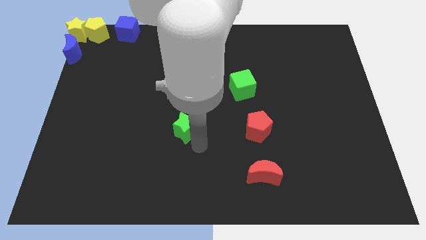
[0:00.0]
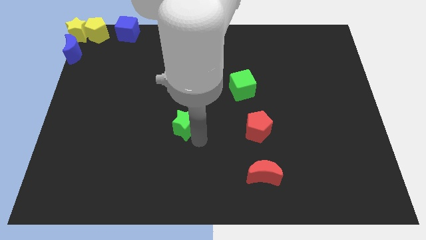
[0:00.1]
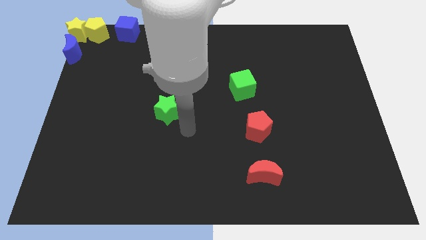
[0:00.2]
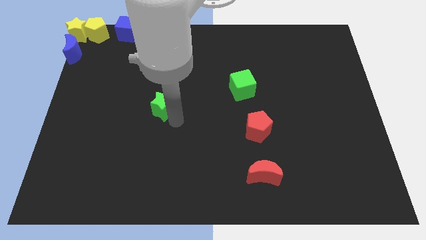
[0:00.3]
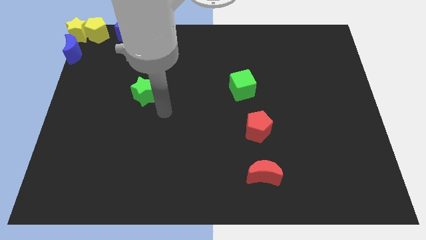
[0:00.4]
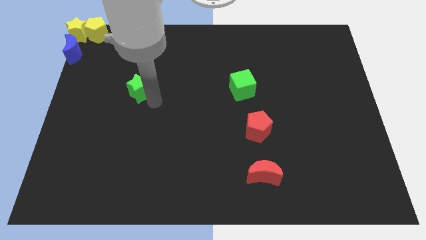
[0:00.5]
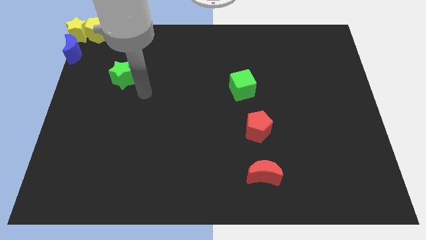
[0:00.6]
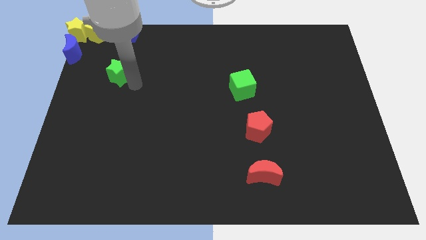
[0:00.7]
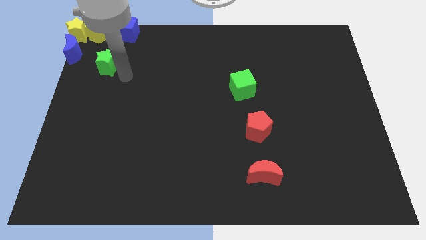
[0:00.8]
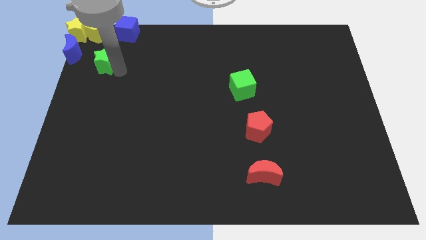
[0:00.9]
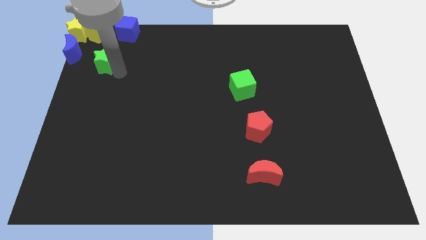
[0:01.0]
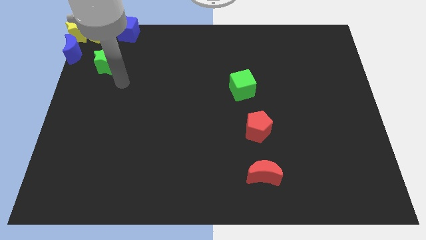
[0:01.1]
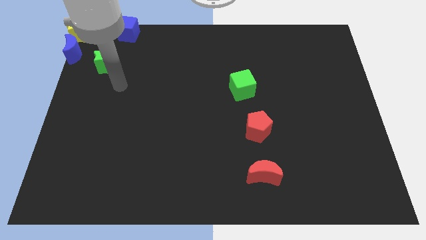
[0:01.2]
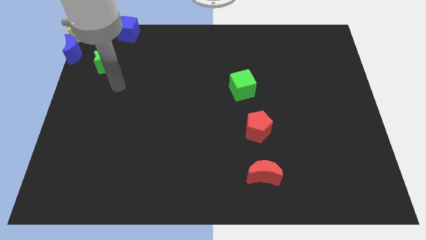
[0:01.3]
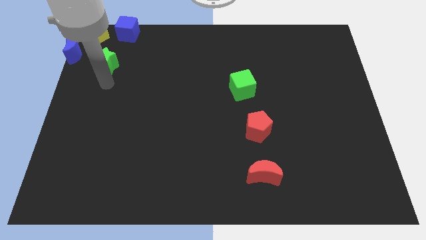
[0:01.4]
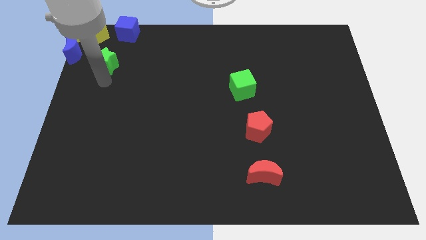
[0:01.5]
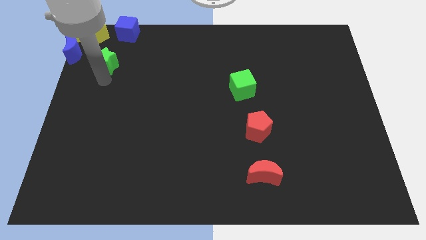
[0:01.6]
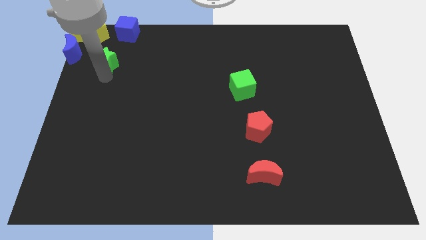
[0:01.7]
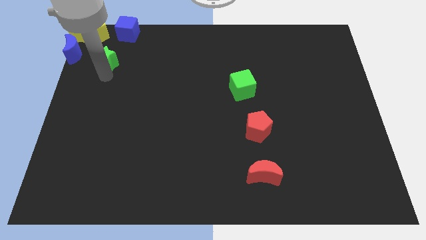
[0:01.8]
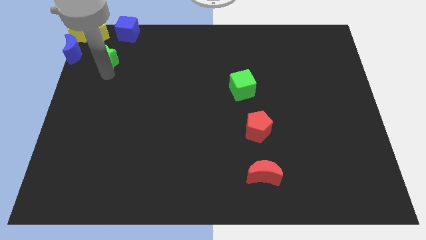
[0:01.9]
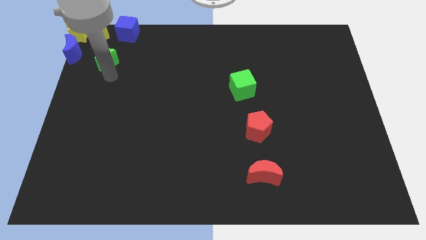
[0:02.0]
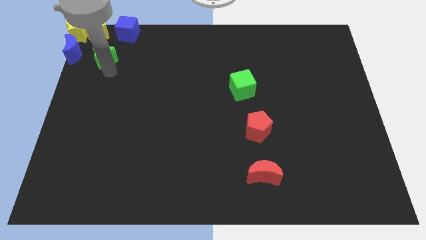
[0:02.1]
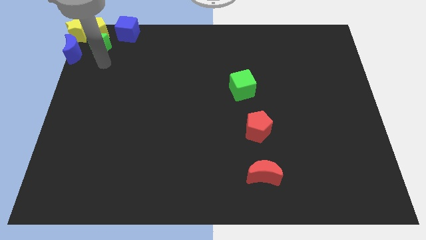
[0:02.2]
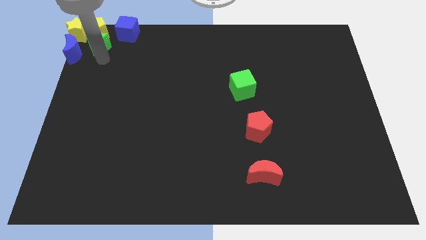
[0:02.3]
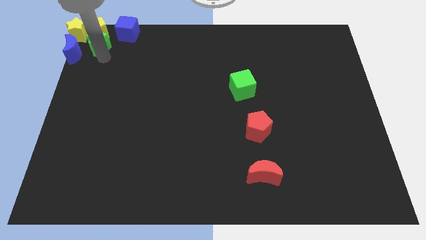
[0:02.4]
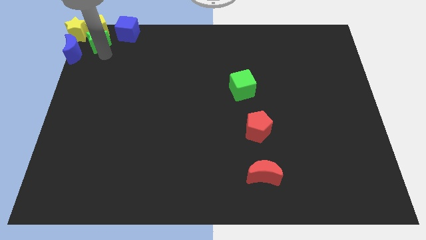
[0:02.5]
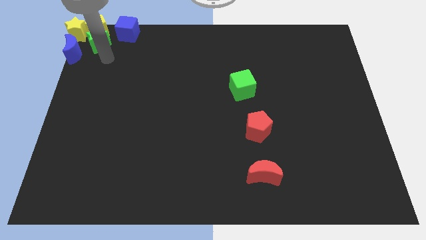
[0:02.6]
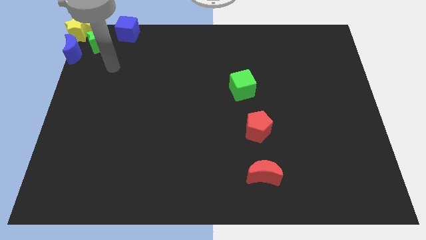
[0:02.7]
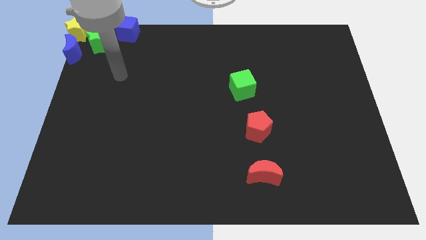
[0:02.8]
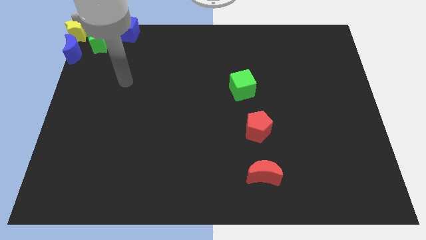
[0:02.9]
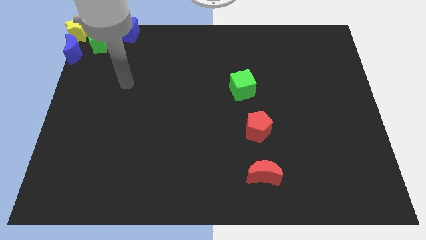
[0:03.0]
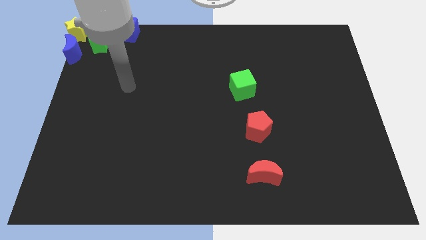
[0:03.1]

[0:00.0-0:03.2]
push the green star into the yellow pentagon

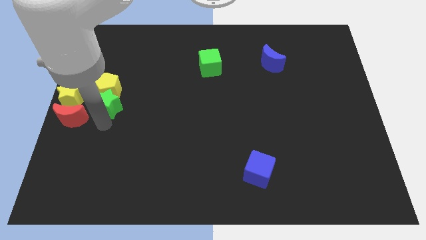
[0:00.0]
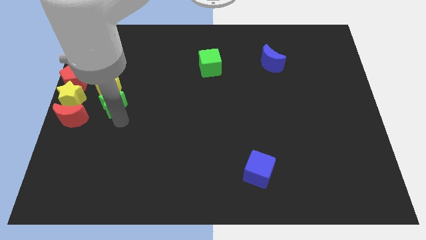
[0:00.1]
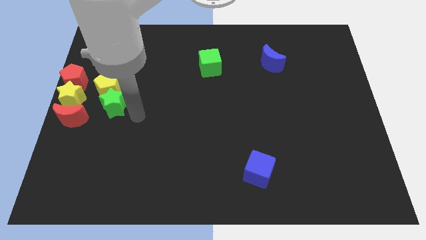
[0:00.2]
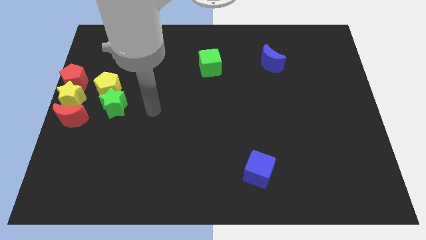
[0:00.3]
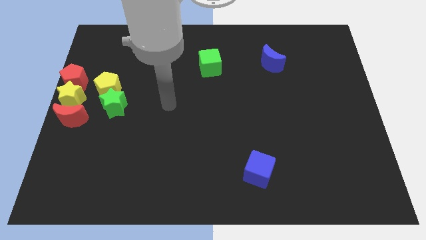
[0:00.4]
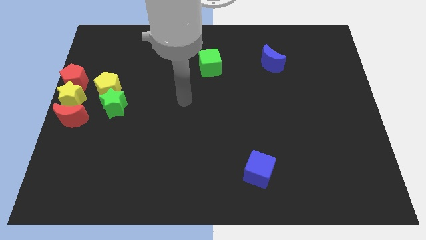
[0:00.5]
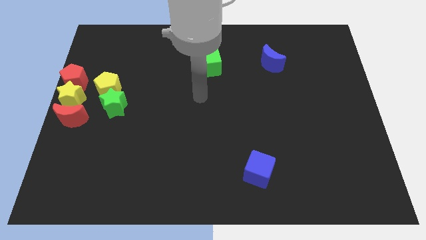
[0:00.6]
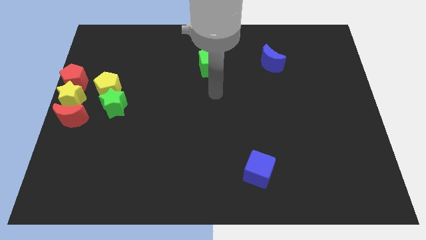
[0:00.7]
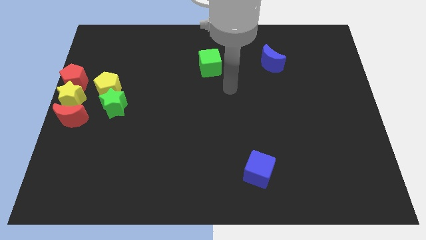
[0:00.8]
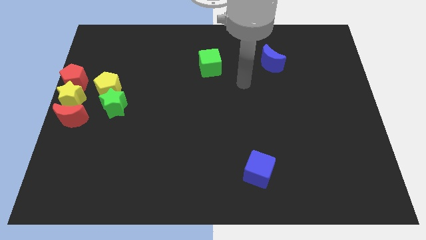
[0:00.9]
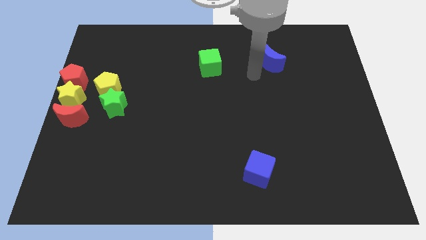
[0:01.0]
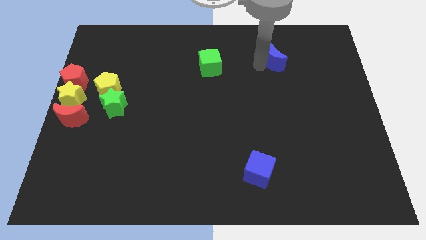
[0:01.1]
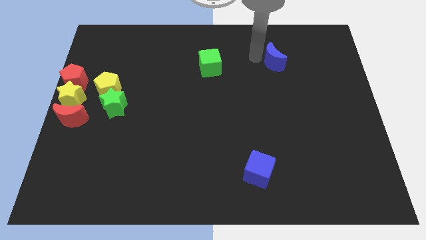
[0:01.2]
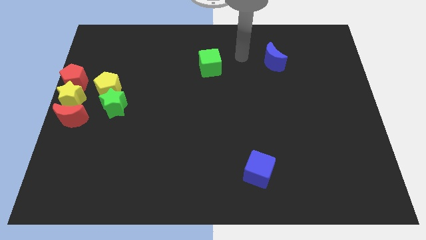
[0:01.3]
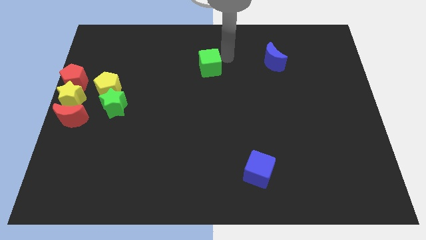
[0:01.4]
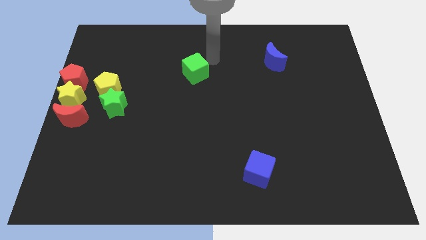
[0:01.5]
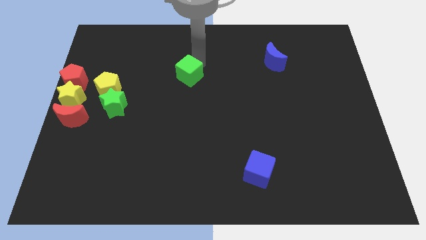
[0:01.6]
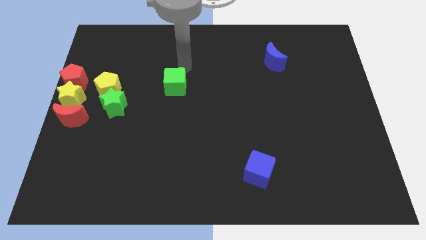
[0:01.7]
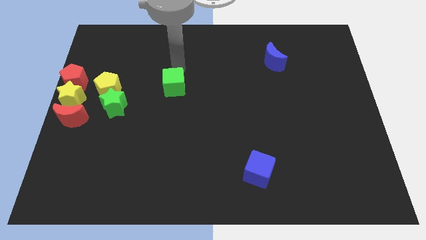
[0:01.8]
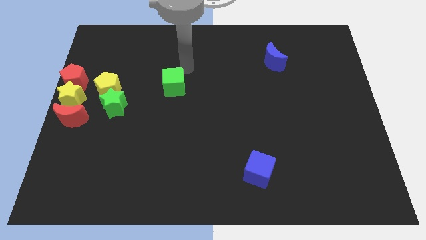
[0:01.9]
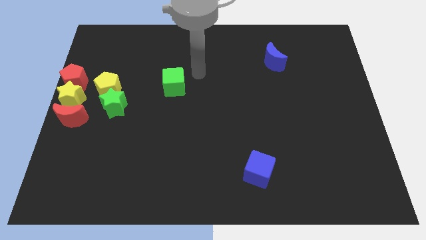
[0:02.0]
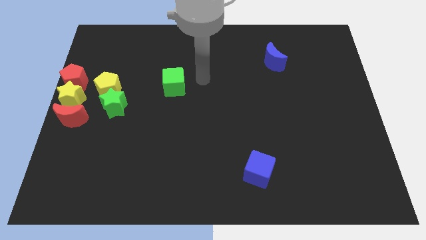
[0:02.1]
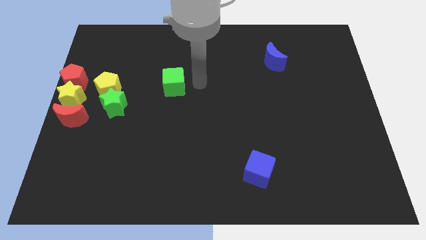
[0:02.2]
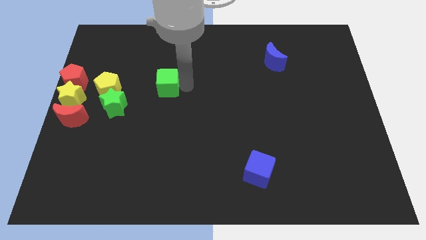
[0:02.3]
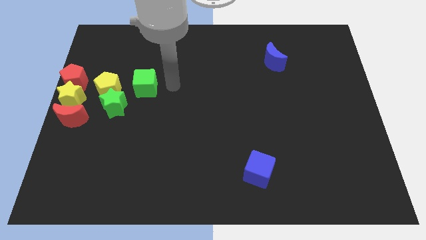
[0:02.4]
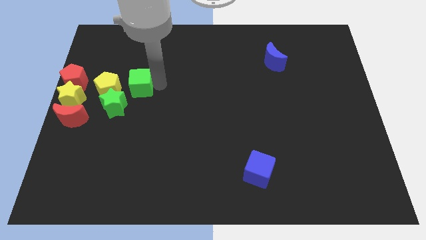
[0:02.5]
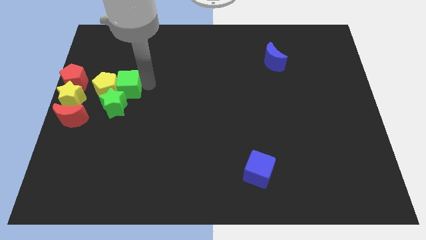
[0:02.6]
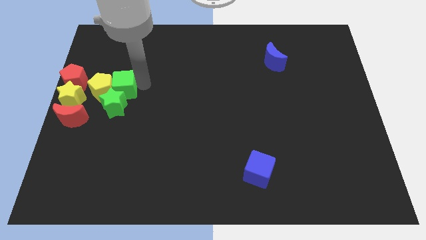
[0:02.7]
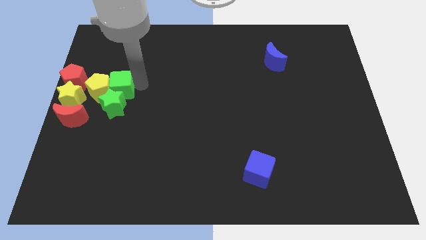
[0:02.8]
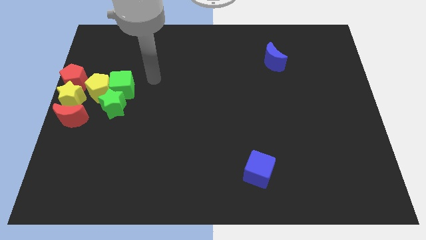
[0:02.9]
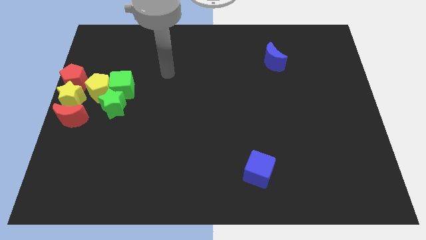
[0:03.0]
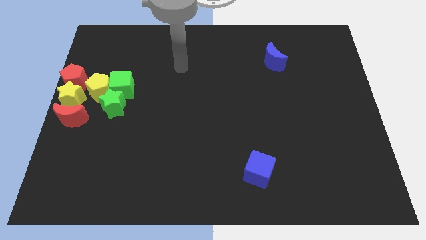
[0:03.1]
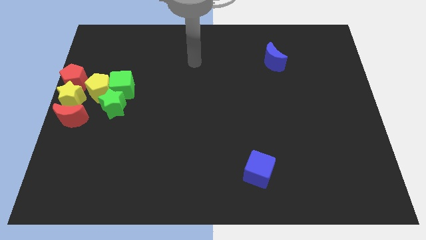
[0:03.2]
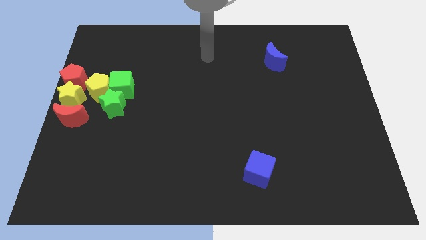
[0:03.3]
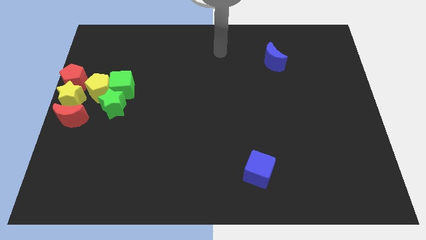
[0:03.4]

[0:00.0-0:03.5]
push the green cube into the yellow pentagon and green star

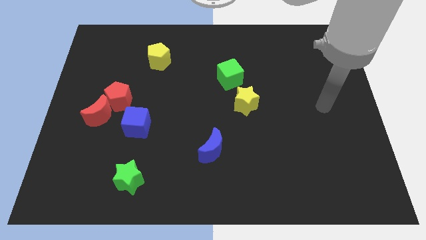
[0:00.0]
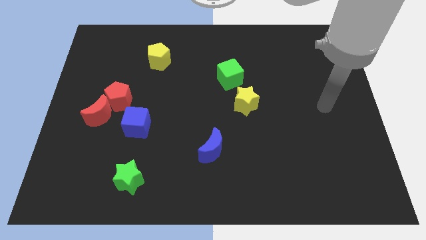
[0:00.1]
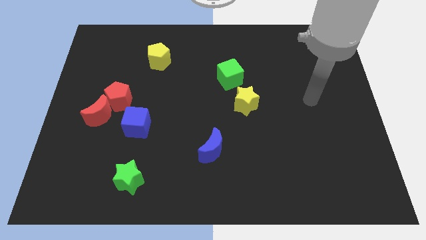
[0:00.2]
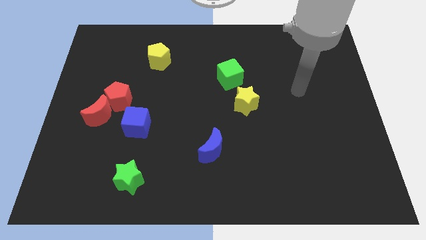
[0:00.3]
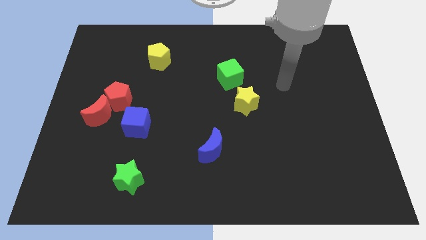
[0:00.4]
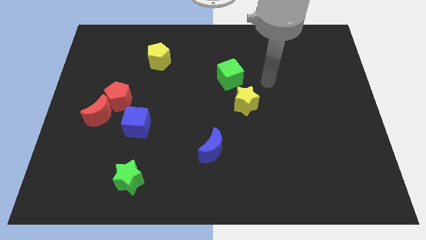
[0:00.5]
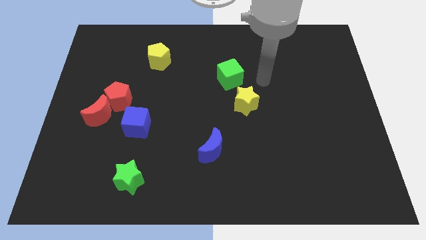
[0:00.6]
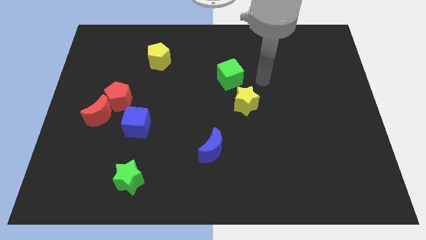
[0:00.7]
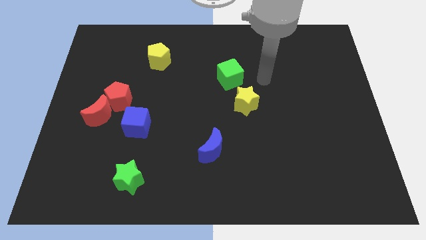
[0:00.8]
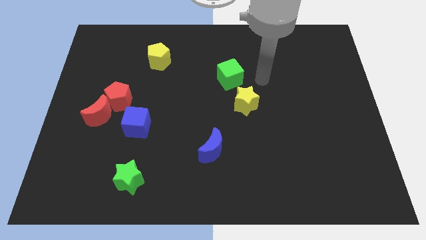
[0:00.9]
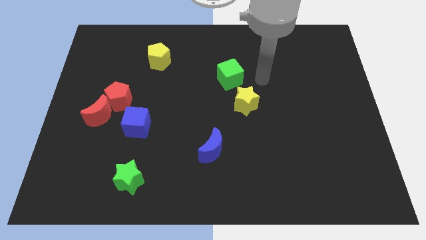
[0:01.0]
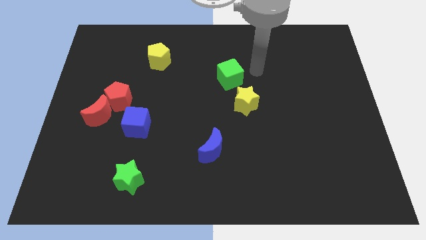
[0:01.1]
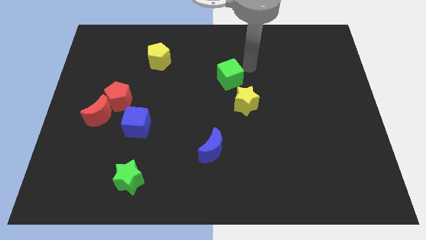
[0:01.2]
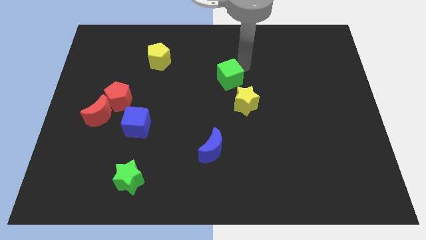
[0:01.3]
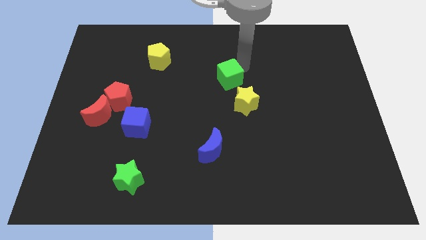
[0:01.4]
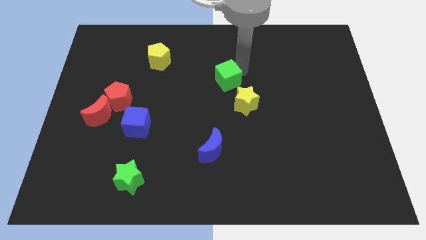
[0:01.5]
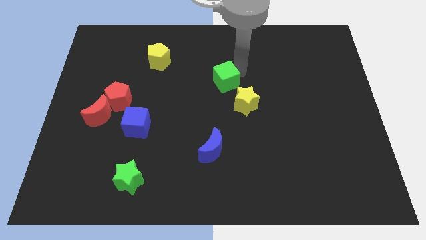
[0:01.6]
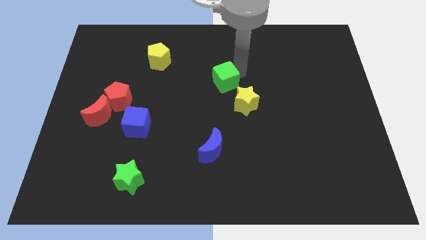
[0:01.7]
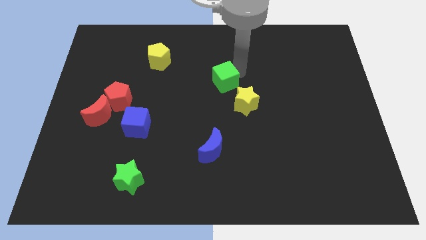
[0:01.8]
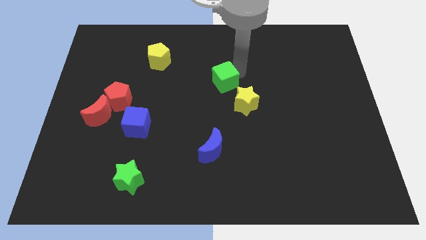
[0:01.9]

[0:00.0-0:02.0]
move your arm towards the green cube

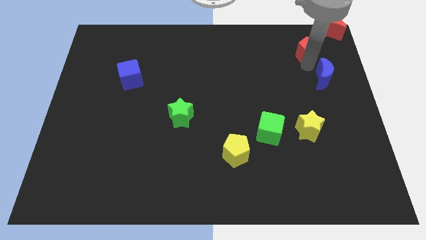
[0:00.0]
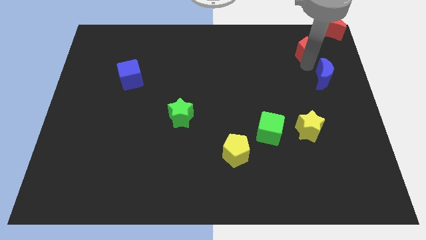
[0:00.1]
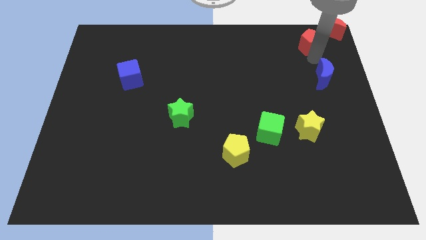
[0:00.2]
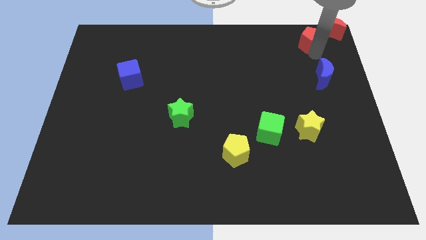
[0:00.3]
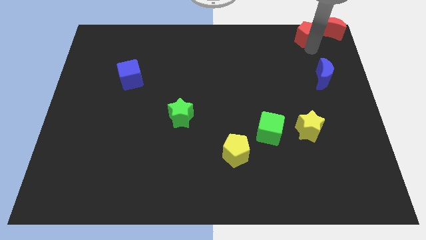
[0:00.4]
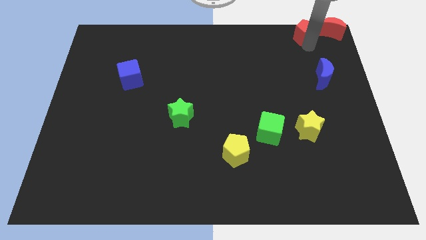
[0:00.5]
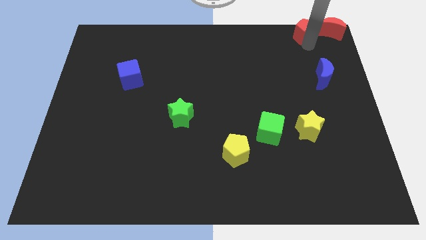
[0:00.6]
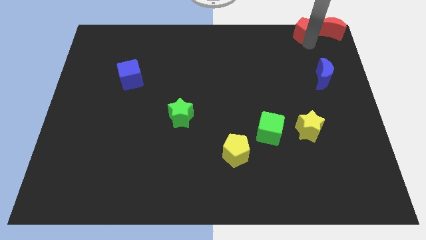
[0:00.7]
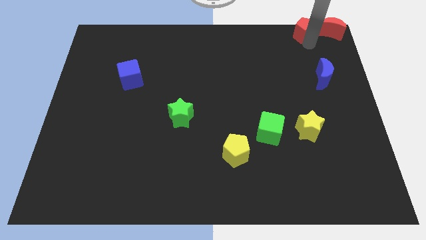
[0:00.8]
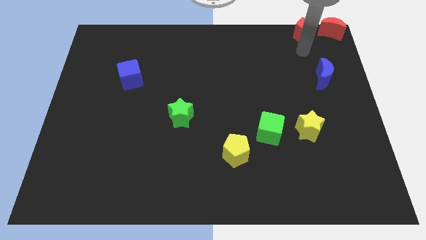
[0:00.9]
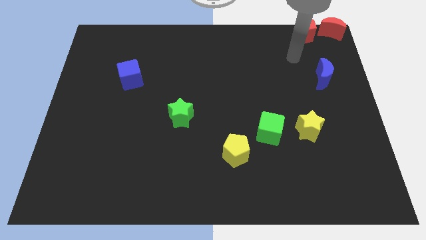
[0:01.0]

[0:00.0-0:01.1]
place red pentagon to the left of red moon
